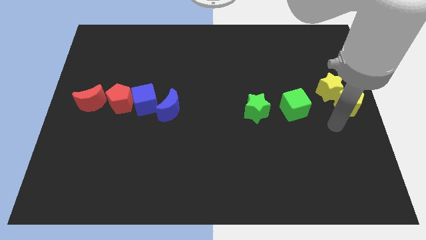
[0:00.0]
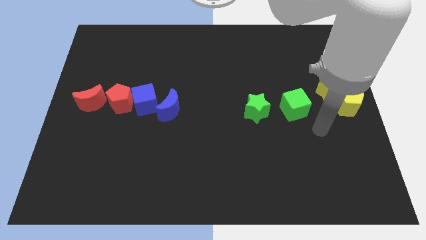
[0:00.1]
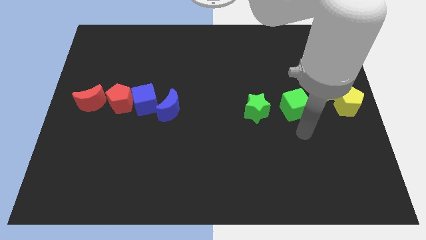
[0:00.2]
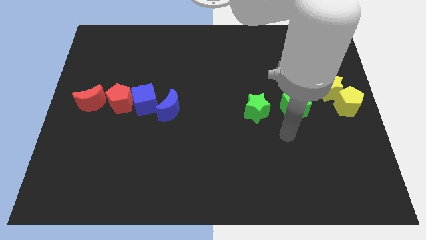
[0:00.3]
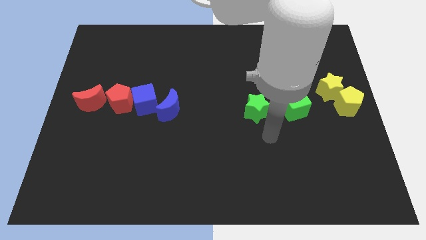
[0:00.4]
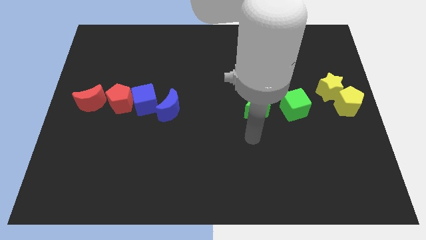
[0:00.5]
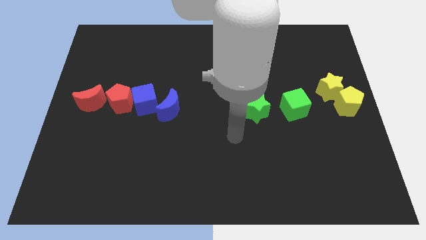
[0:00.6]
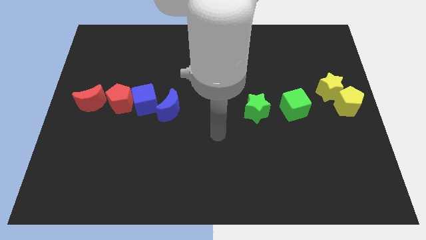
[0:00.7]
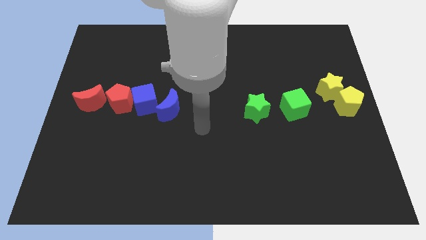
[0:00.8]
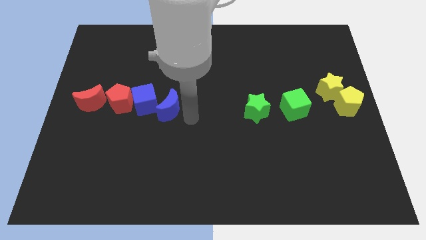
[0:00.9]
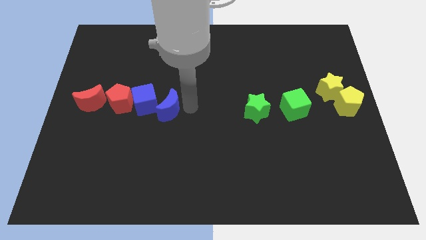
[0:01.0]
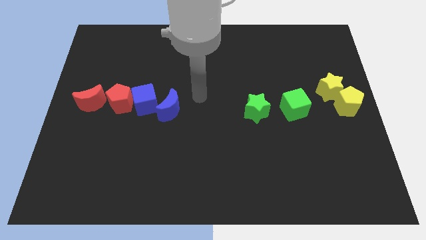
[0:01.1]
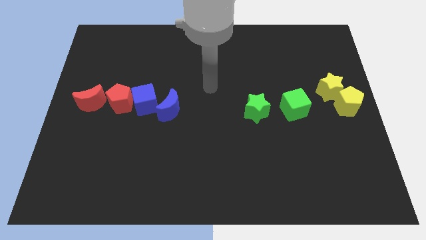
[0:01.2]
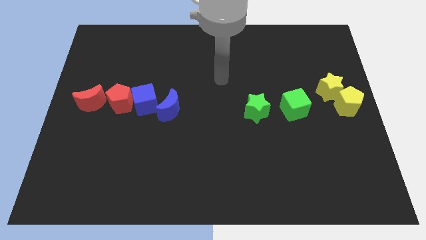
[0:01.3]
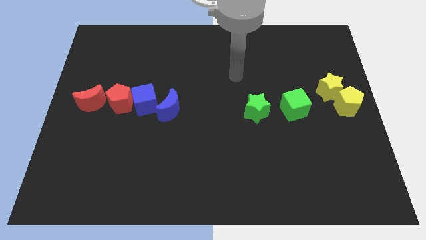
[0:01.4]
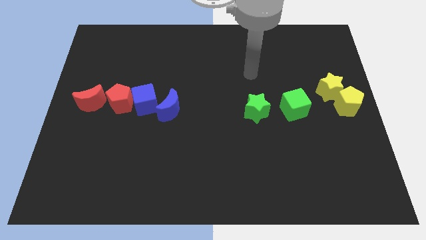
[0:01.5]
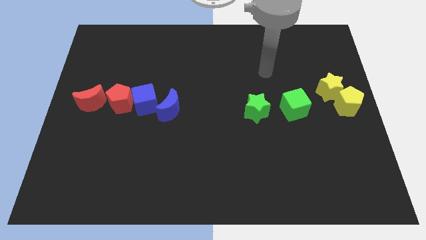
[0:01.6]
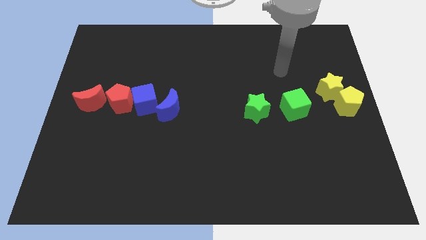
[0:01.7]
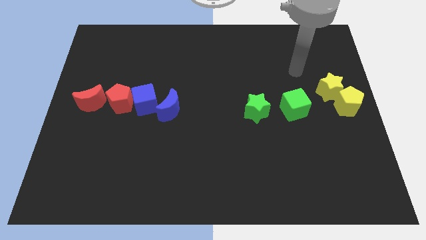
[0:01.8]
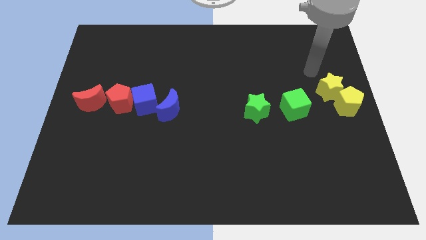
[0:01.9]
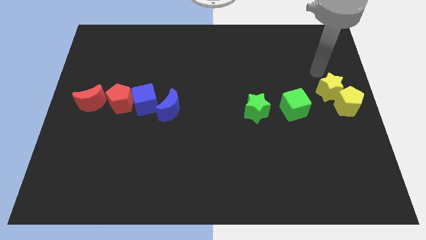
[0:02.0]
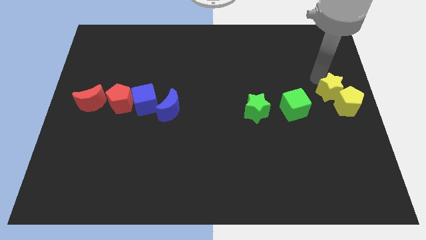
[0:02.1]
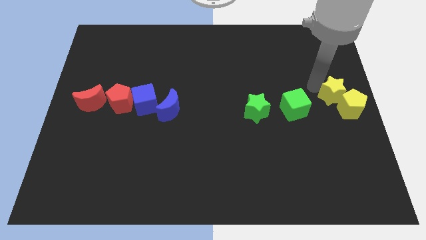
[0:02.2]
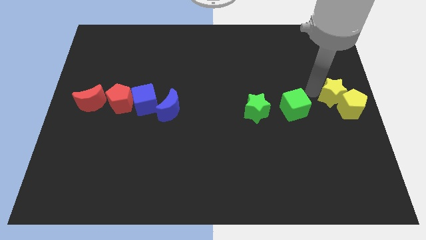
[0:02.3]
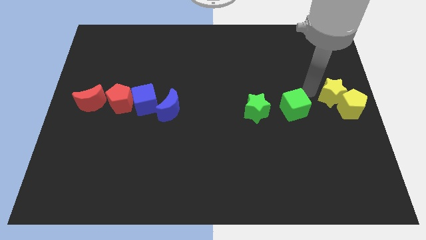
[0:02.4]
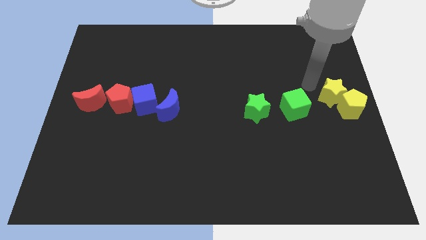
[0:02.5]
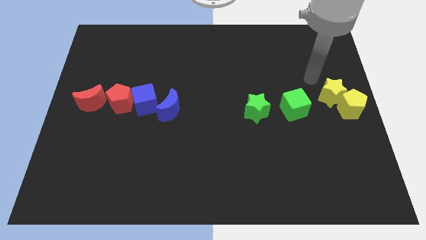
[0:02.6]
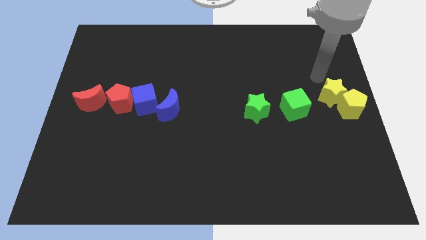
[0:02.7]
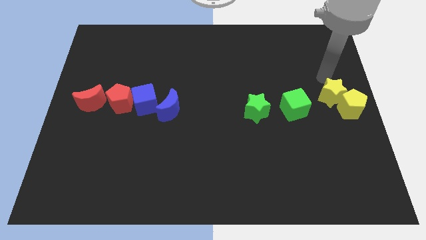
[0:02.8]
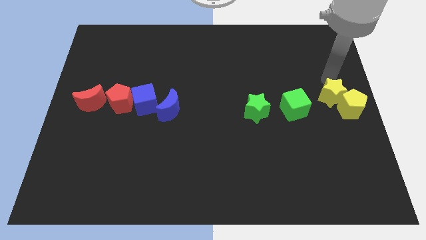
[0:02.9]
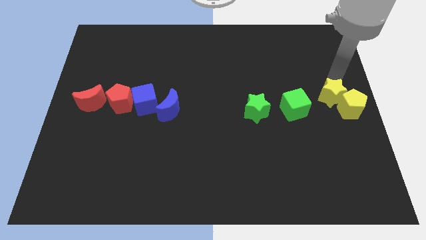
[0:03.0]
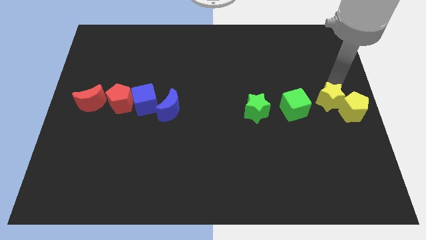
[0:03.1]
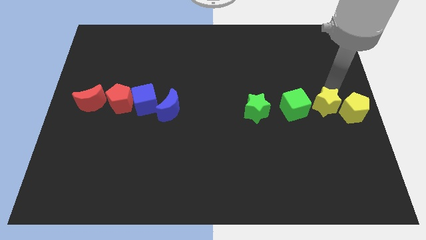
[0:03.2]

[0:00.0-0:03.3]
move yellow blocks slightly down

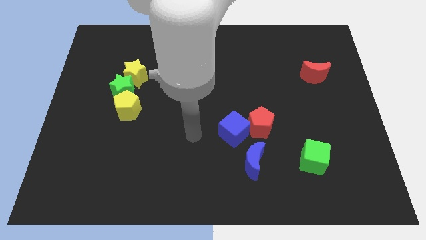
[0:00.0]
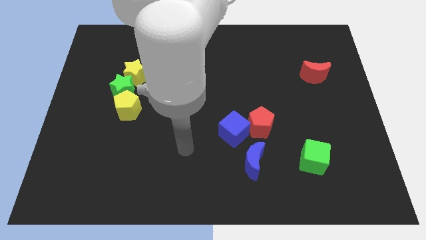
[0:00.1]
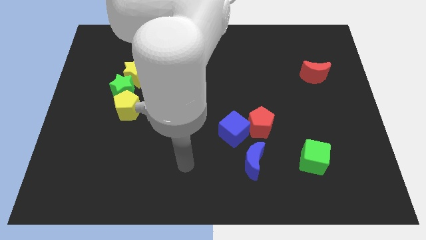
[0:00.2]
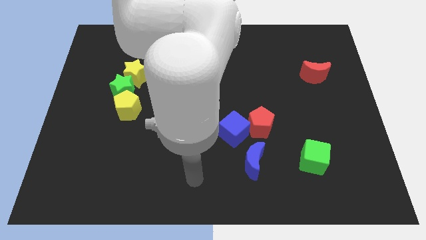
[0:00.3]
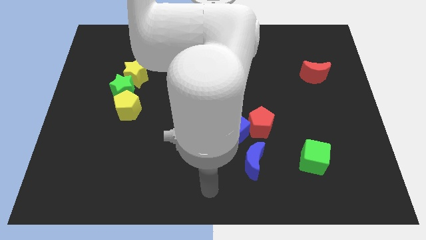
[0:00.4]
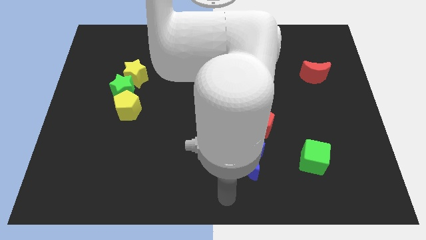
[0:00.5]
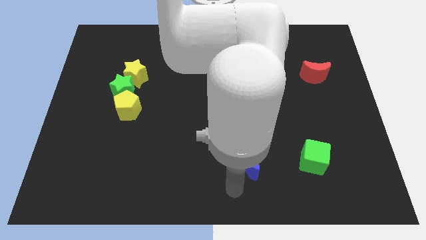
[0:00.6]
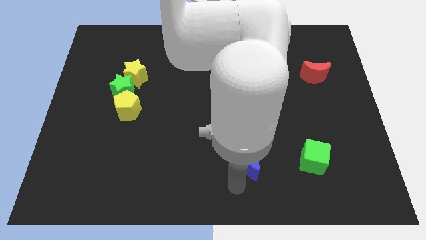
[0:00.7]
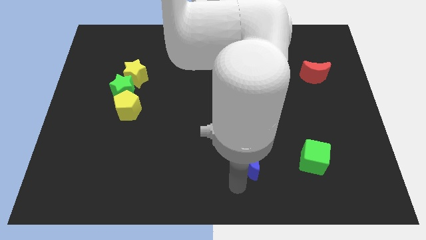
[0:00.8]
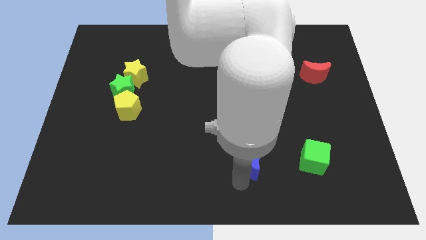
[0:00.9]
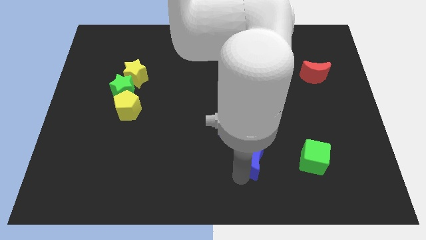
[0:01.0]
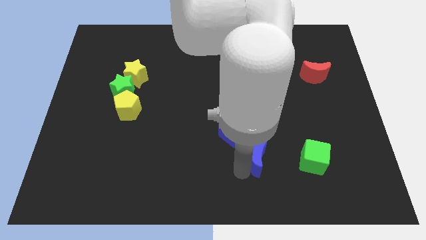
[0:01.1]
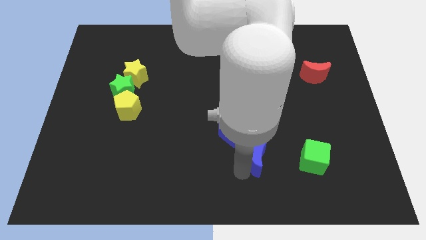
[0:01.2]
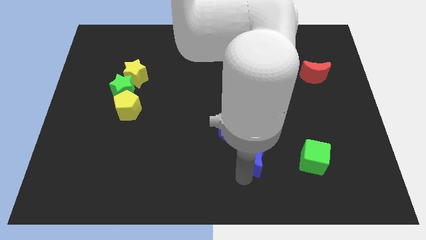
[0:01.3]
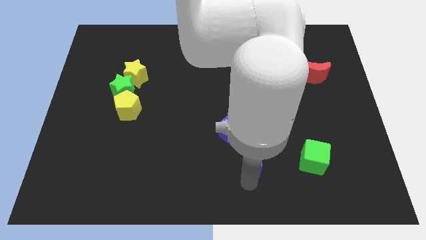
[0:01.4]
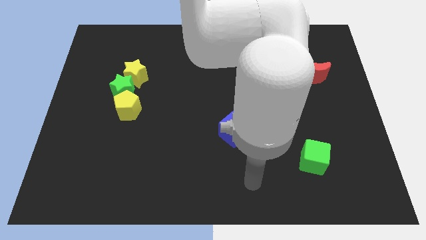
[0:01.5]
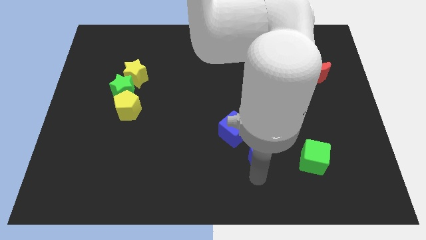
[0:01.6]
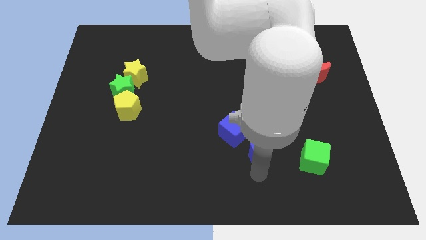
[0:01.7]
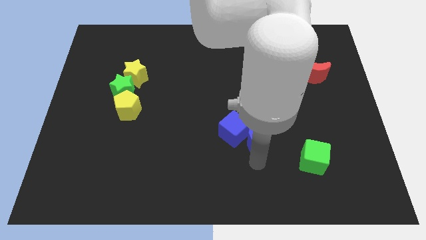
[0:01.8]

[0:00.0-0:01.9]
push the blue moon into the red pentagon

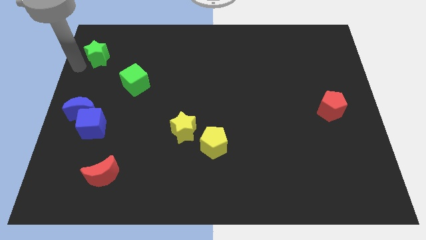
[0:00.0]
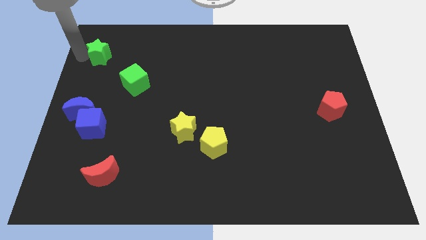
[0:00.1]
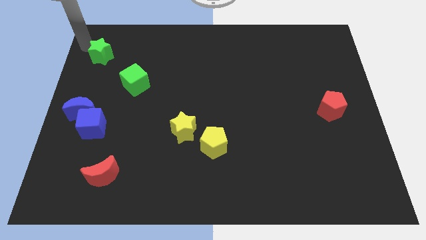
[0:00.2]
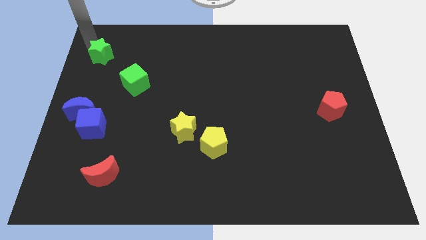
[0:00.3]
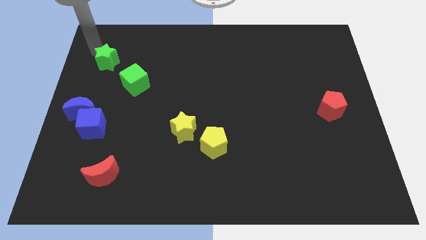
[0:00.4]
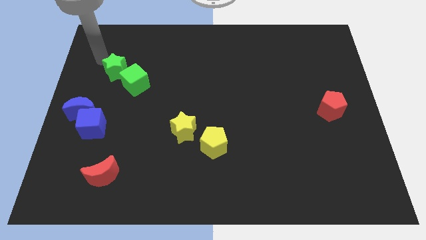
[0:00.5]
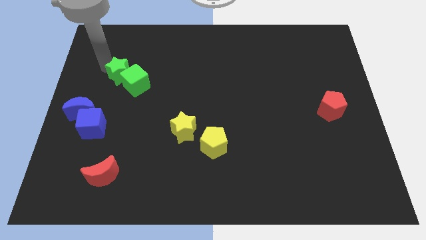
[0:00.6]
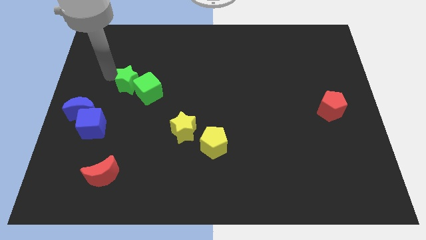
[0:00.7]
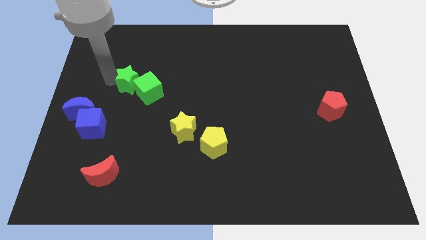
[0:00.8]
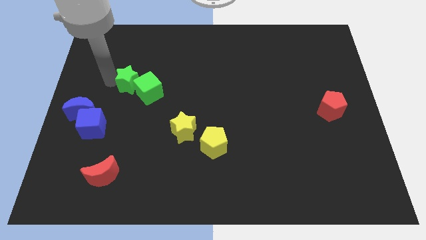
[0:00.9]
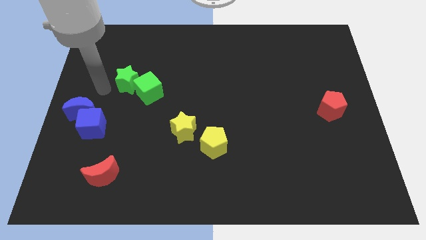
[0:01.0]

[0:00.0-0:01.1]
push green star in to green cube

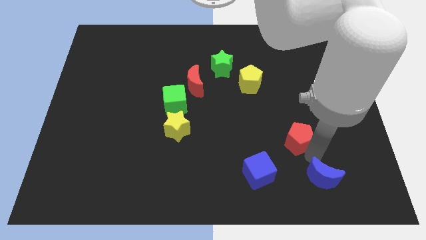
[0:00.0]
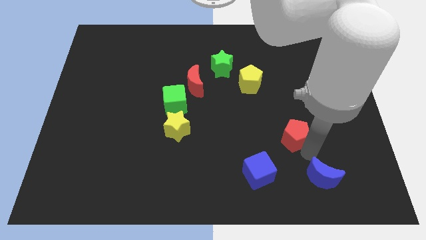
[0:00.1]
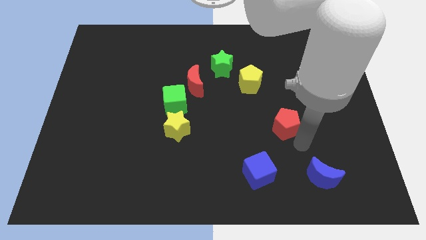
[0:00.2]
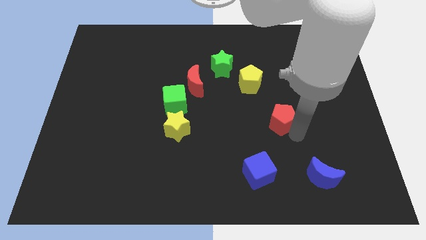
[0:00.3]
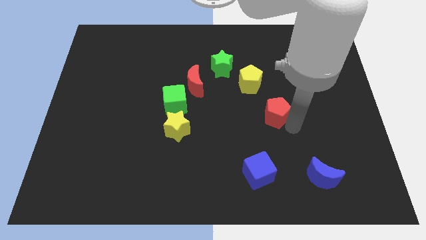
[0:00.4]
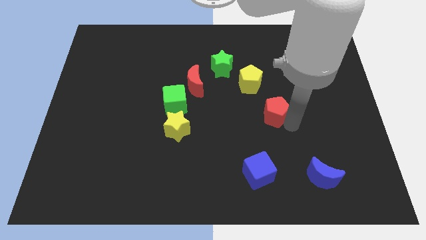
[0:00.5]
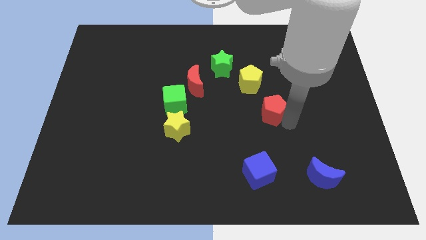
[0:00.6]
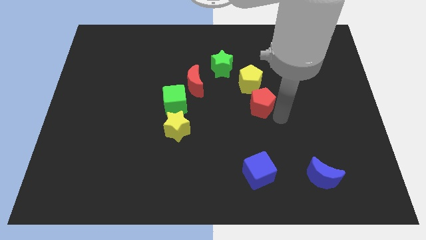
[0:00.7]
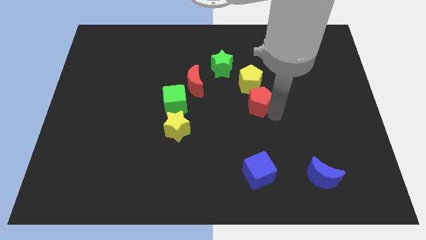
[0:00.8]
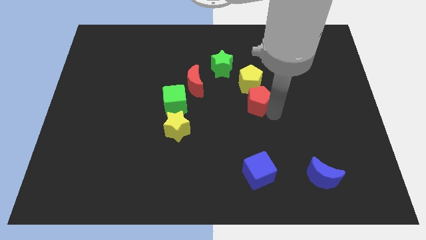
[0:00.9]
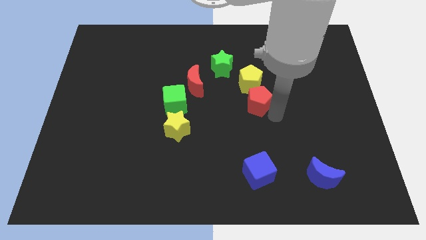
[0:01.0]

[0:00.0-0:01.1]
move the red pentagon to the bottom of the yellow pentagon

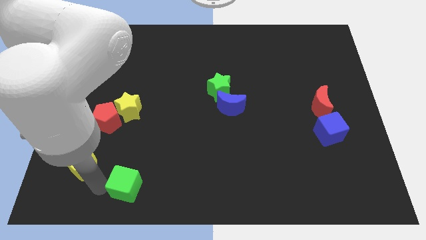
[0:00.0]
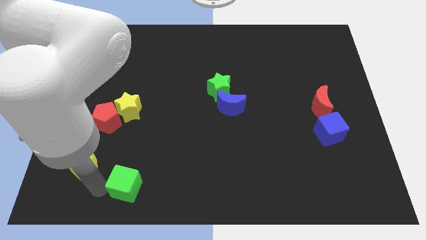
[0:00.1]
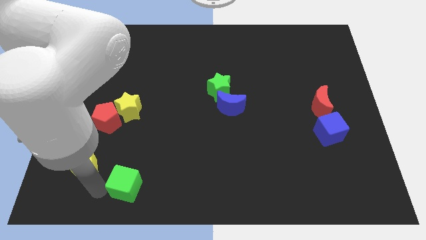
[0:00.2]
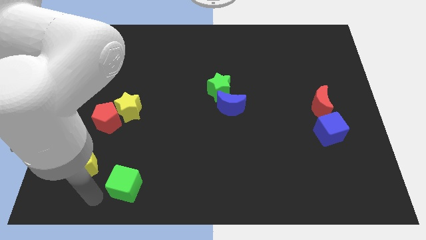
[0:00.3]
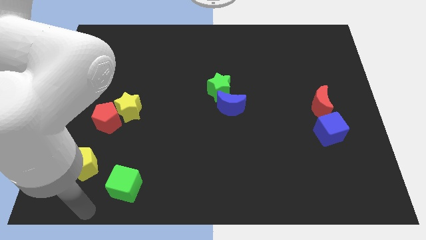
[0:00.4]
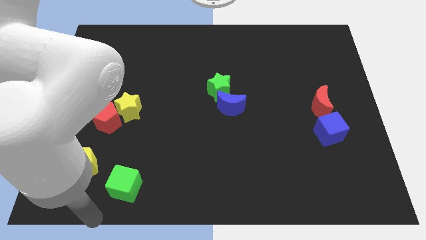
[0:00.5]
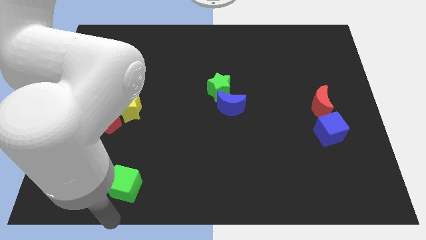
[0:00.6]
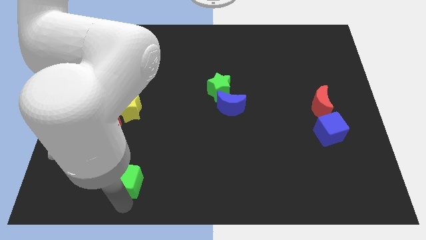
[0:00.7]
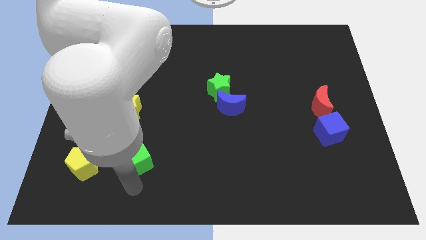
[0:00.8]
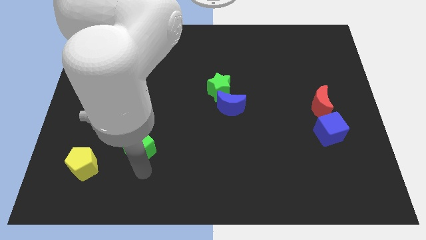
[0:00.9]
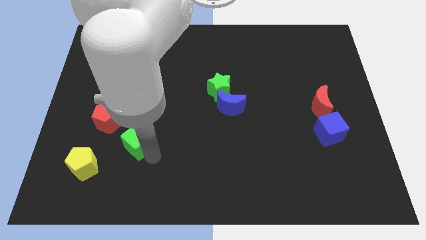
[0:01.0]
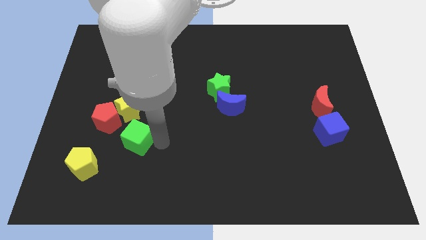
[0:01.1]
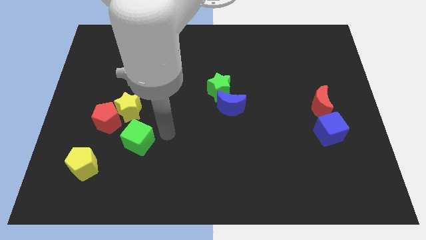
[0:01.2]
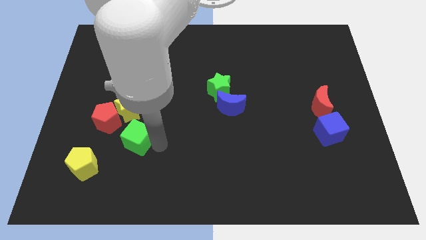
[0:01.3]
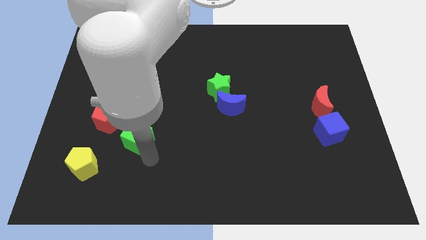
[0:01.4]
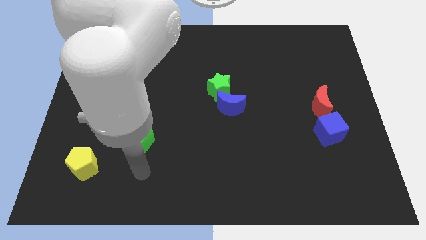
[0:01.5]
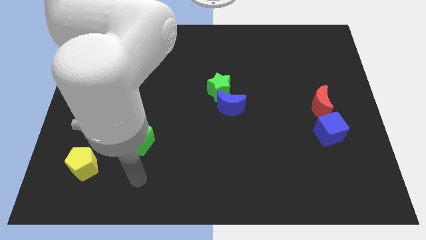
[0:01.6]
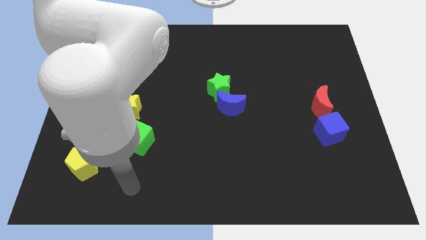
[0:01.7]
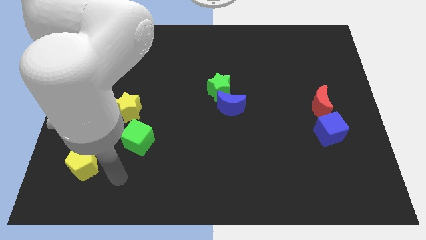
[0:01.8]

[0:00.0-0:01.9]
move the green cube below the yellow star
